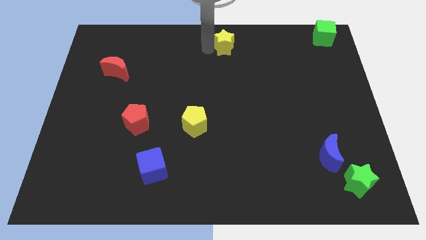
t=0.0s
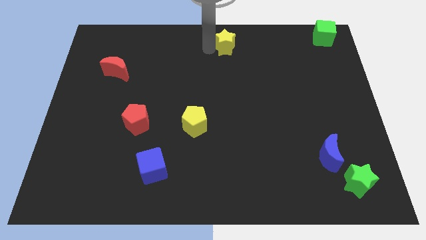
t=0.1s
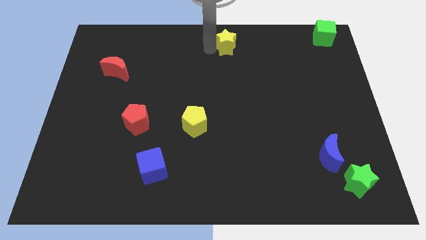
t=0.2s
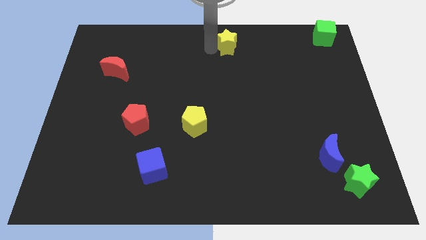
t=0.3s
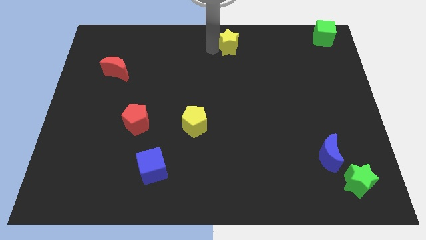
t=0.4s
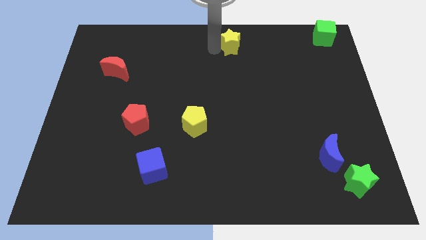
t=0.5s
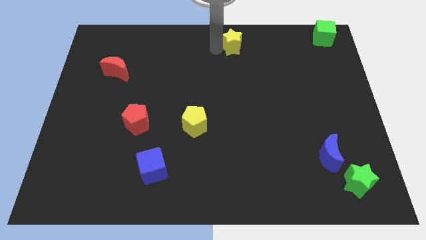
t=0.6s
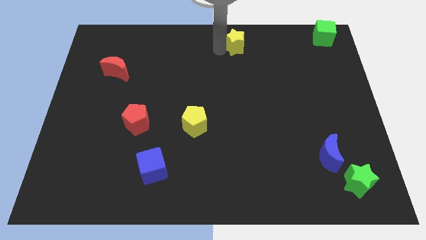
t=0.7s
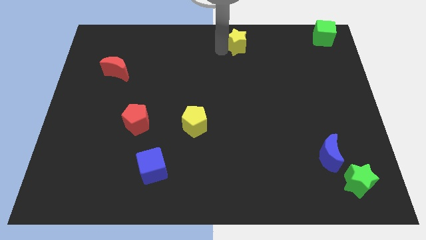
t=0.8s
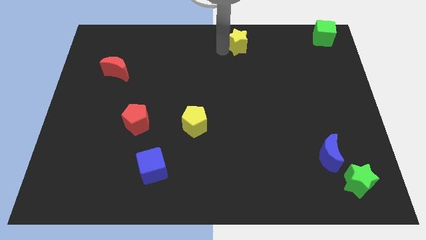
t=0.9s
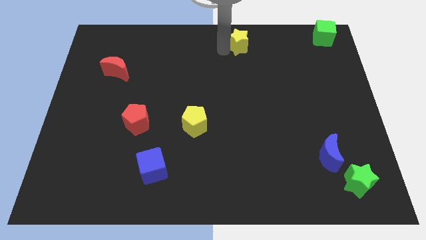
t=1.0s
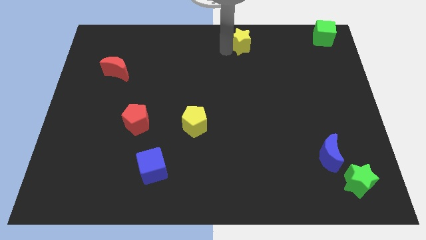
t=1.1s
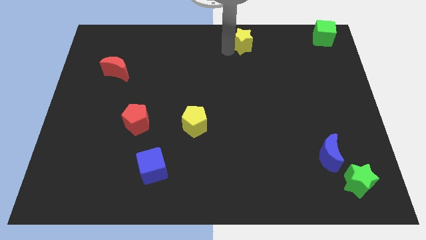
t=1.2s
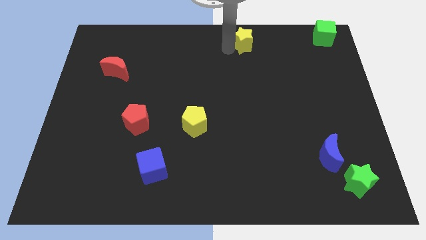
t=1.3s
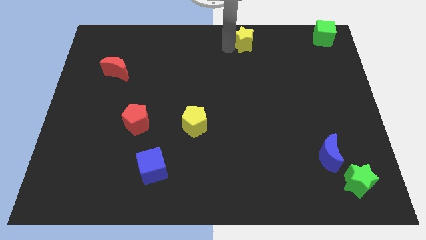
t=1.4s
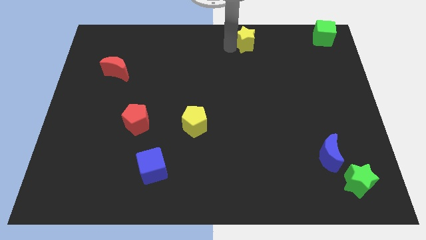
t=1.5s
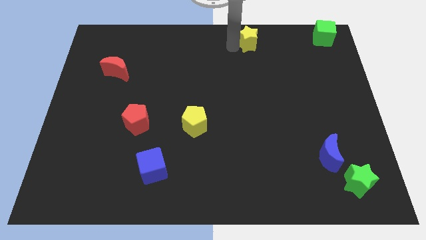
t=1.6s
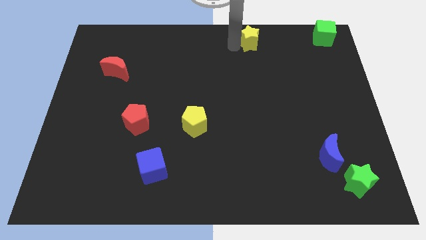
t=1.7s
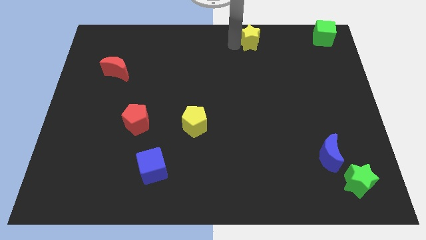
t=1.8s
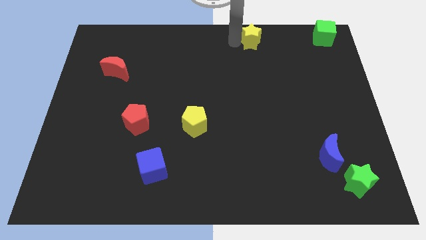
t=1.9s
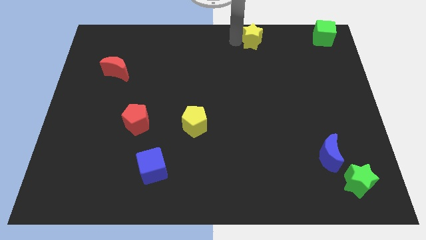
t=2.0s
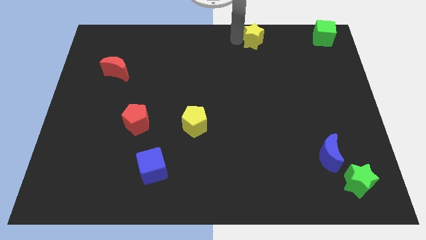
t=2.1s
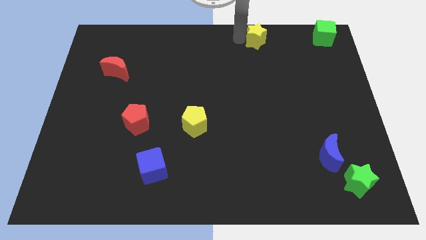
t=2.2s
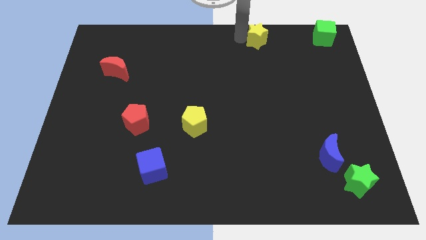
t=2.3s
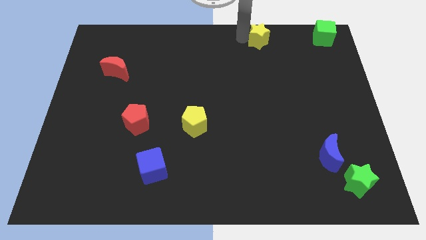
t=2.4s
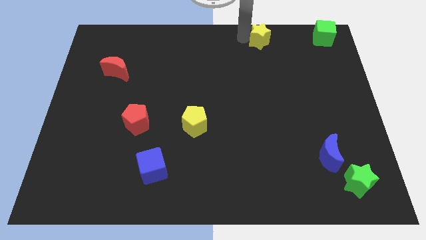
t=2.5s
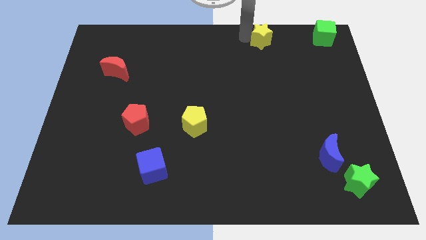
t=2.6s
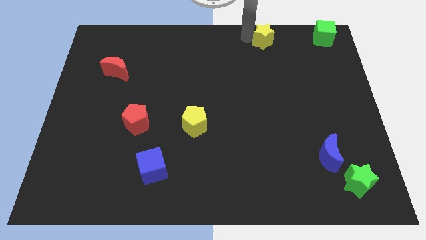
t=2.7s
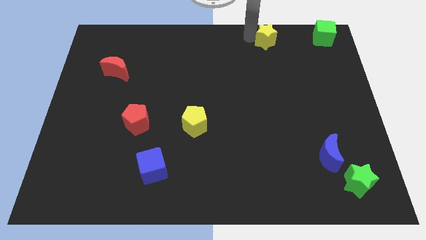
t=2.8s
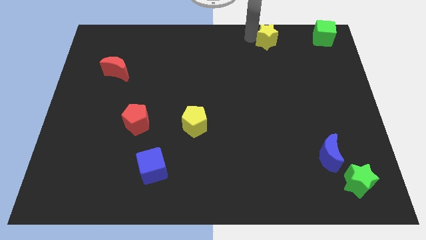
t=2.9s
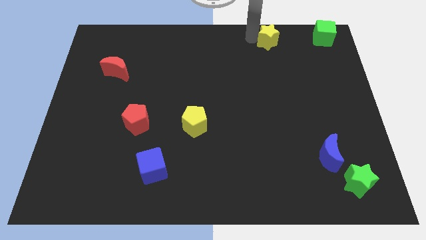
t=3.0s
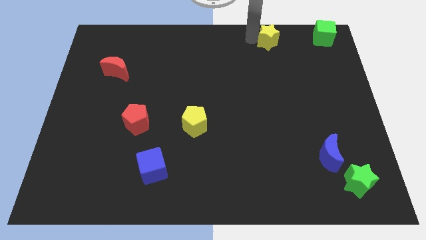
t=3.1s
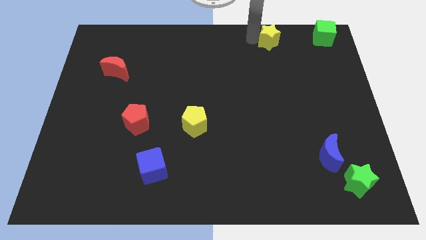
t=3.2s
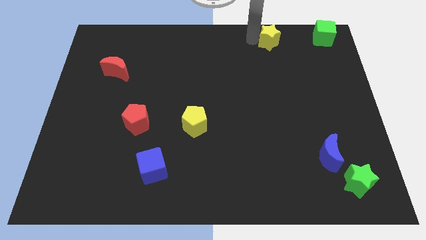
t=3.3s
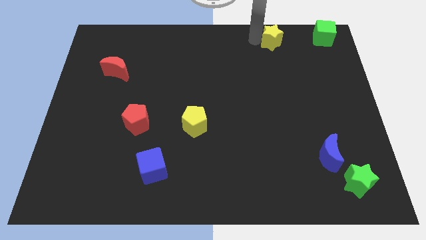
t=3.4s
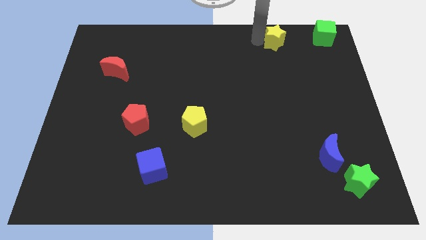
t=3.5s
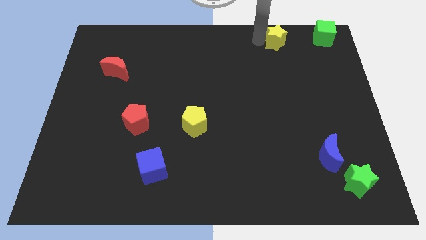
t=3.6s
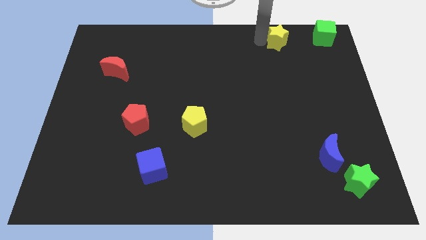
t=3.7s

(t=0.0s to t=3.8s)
push star to the top right side of the board

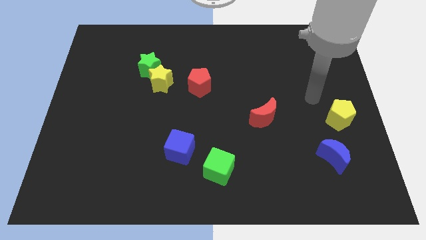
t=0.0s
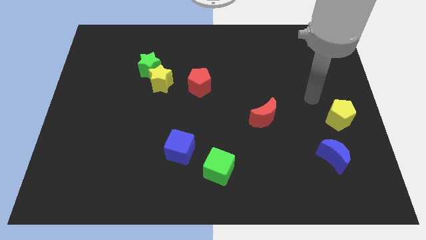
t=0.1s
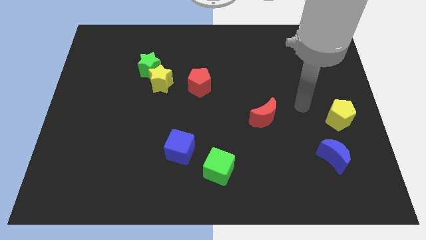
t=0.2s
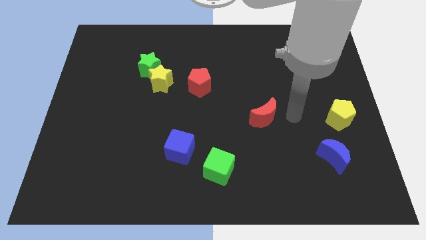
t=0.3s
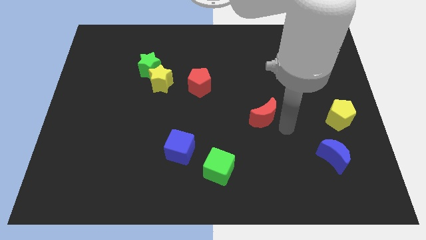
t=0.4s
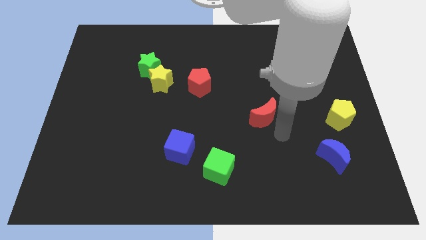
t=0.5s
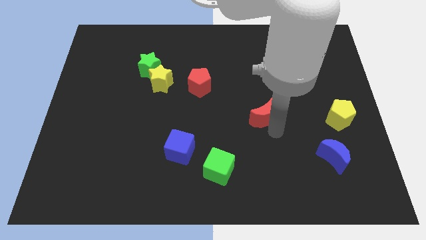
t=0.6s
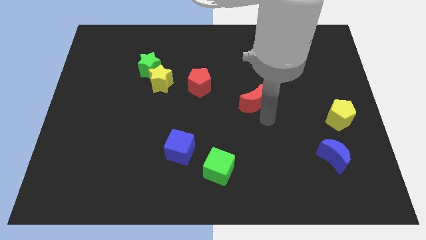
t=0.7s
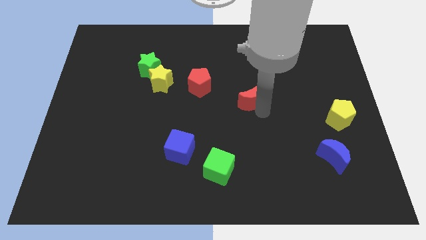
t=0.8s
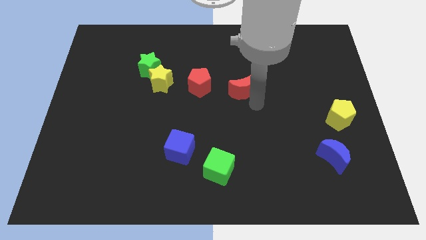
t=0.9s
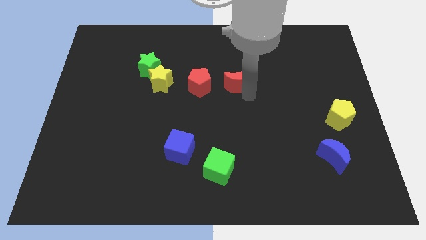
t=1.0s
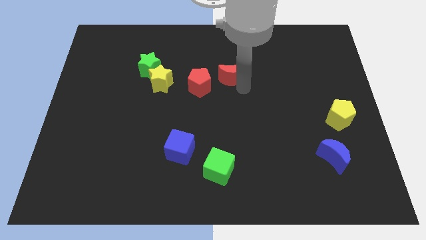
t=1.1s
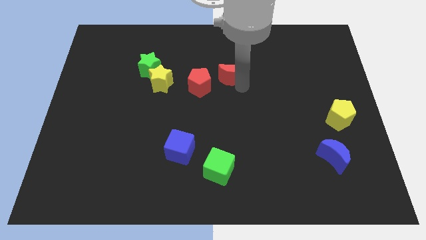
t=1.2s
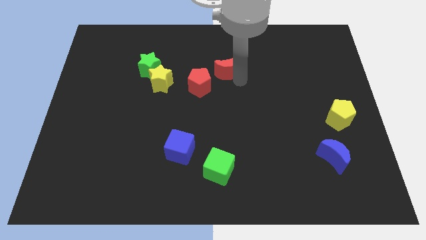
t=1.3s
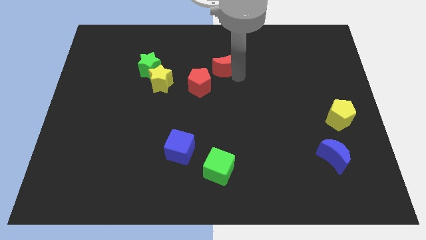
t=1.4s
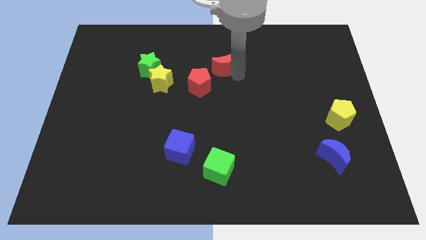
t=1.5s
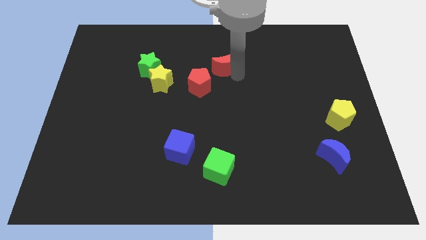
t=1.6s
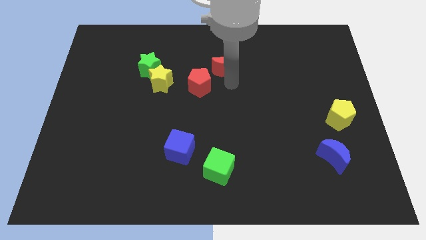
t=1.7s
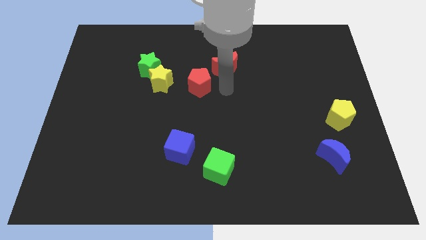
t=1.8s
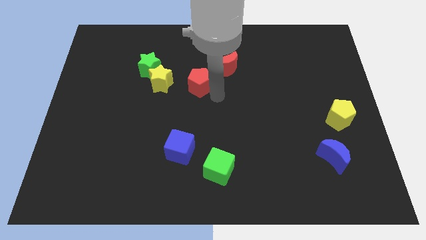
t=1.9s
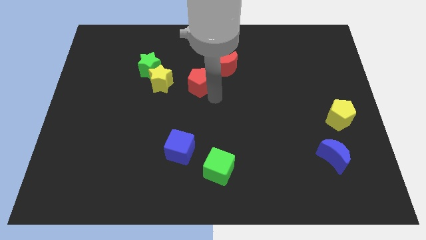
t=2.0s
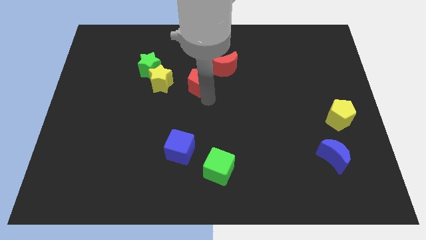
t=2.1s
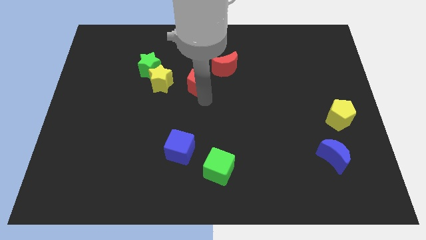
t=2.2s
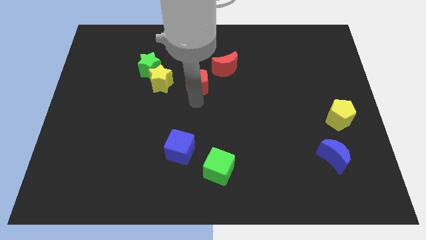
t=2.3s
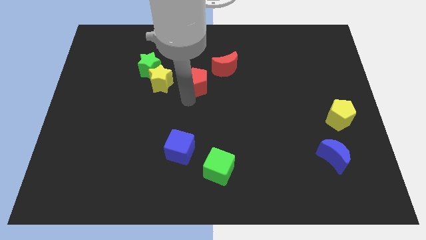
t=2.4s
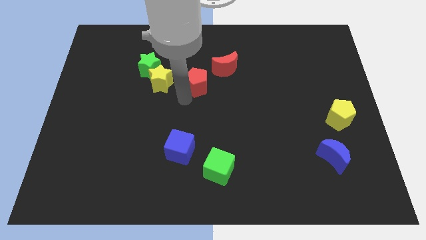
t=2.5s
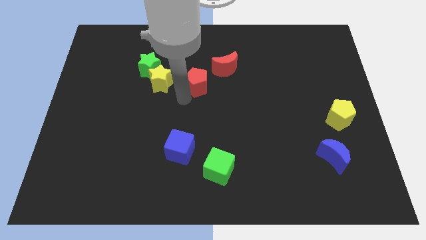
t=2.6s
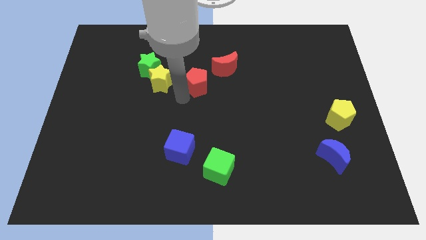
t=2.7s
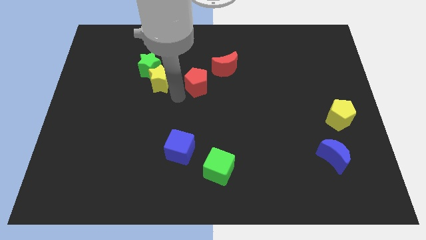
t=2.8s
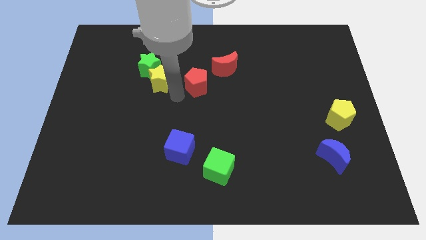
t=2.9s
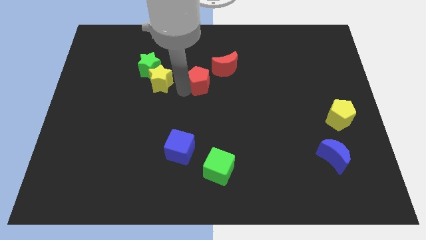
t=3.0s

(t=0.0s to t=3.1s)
move the red moon diagonally top right to the red pentagon

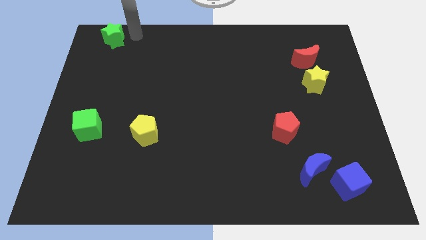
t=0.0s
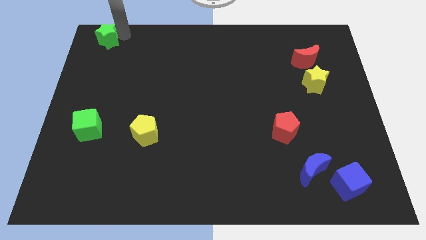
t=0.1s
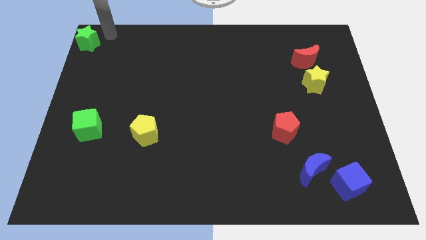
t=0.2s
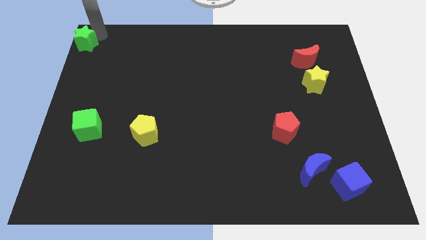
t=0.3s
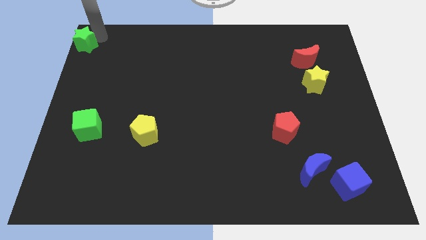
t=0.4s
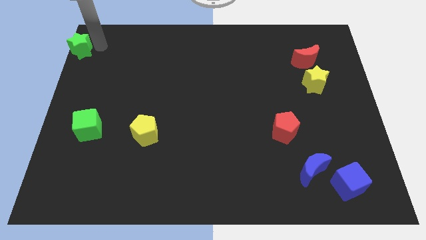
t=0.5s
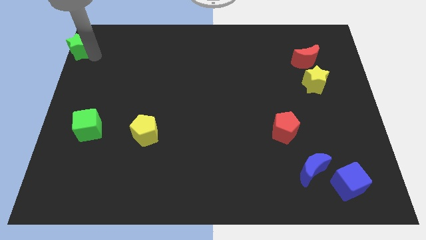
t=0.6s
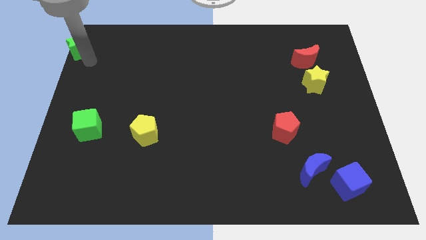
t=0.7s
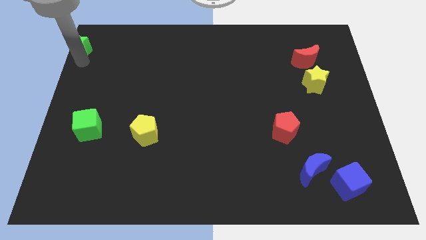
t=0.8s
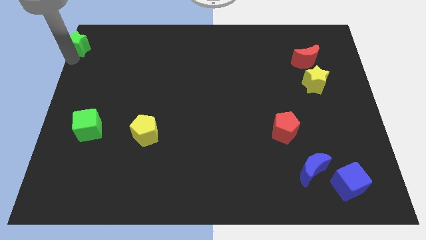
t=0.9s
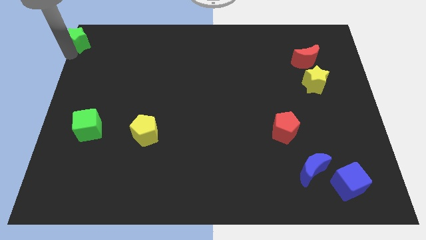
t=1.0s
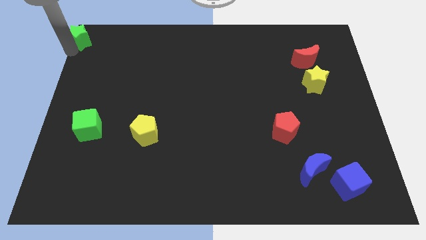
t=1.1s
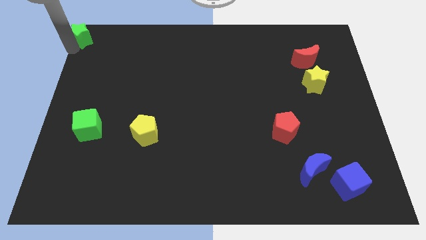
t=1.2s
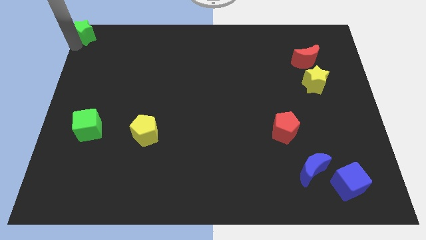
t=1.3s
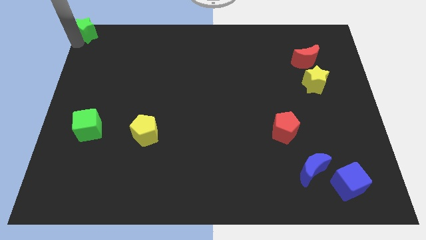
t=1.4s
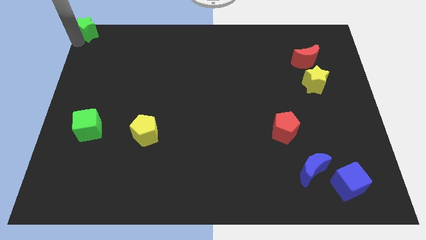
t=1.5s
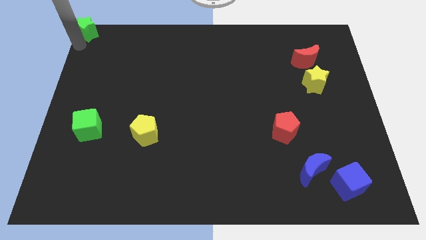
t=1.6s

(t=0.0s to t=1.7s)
put the green star at the top left corner of the board

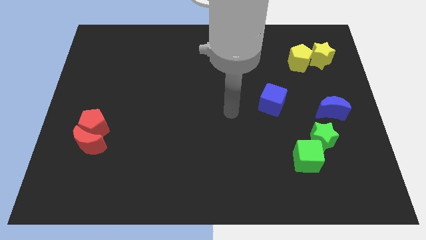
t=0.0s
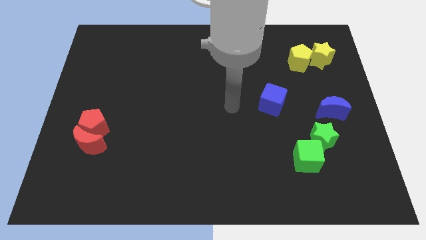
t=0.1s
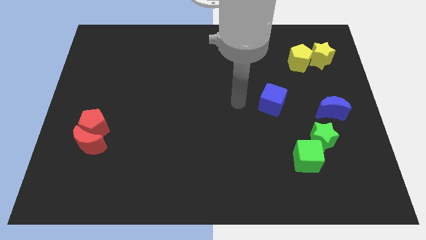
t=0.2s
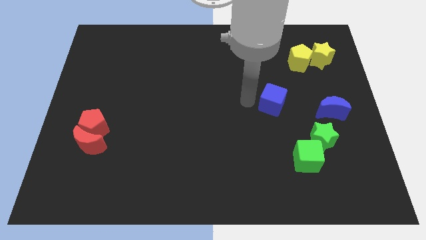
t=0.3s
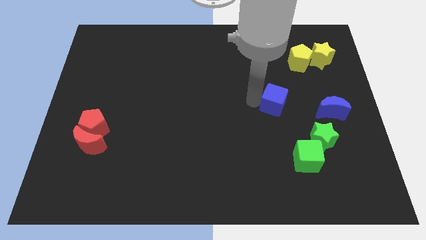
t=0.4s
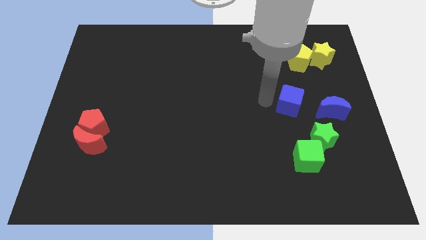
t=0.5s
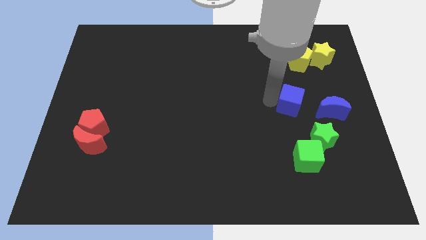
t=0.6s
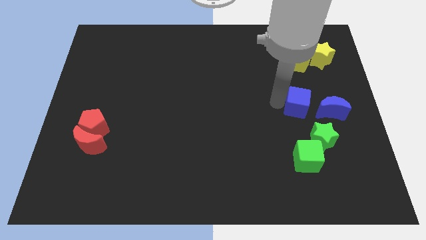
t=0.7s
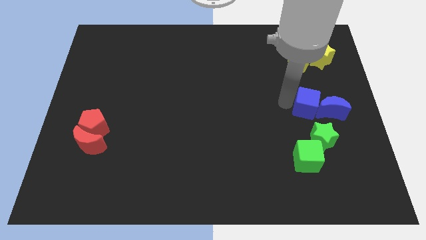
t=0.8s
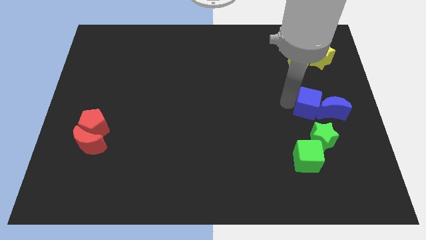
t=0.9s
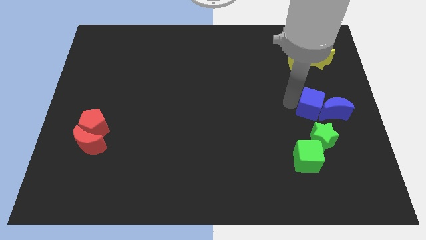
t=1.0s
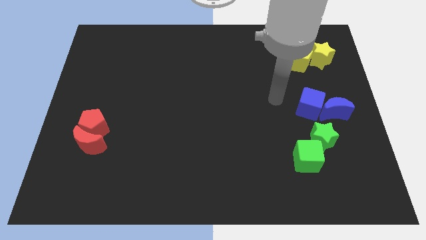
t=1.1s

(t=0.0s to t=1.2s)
place the blue cube to the left of blue crescent
